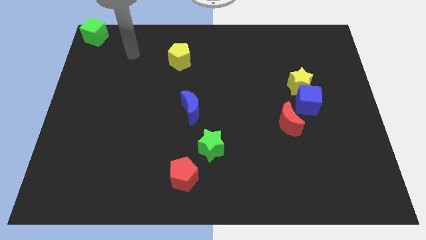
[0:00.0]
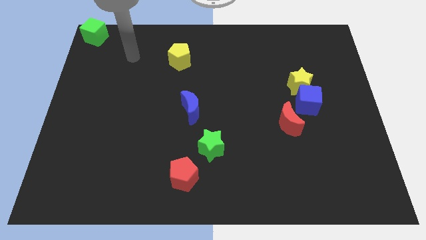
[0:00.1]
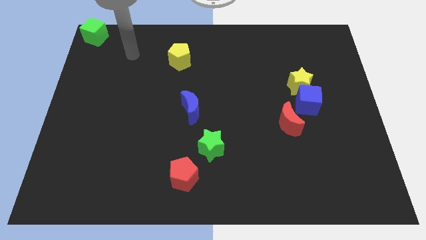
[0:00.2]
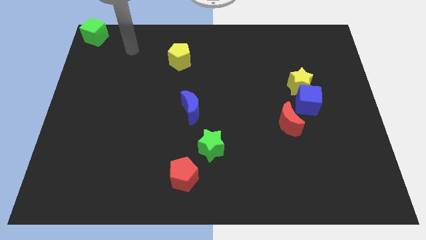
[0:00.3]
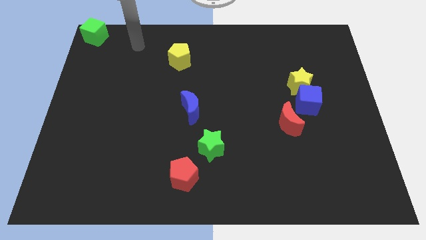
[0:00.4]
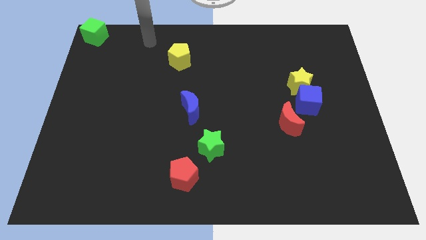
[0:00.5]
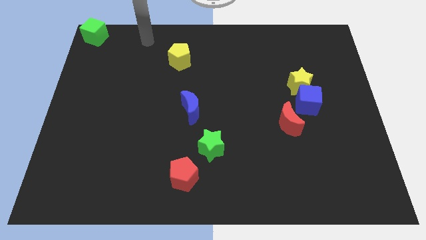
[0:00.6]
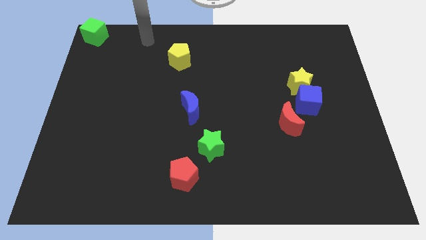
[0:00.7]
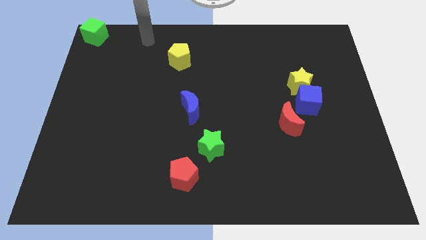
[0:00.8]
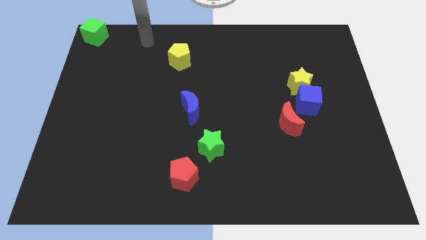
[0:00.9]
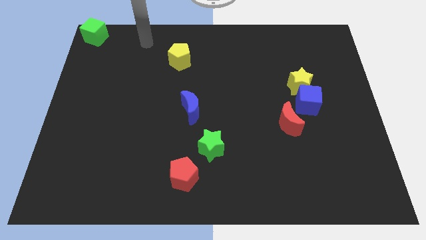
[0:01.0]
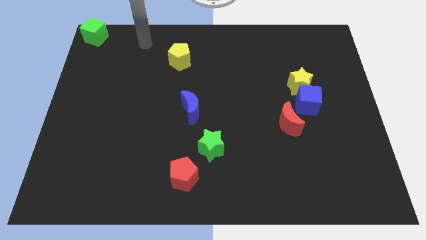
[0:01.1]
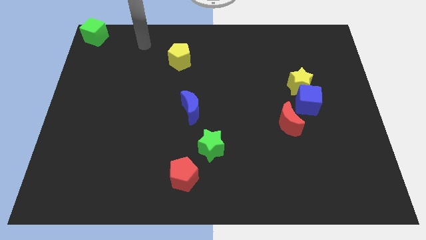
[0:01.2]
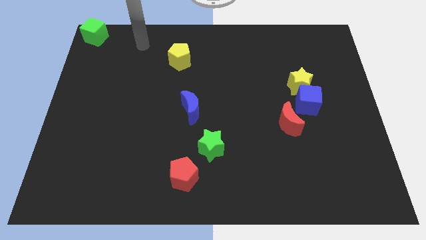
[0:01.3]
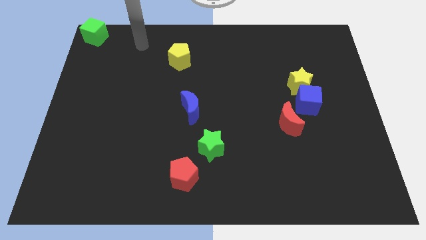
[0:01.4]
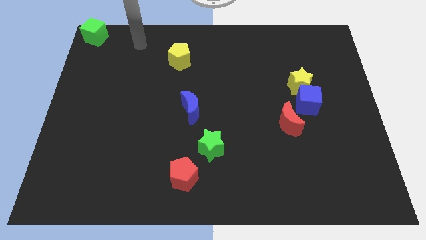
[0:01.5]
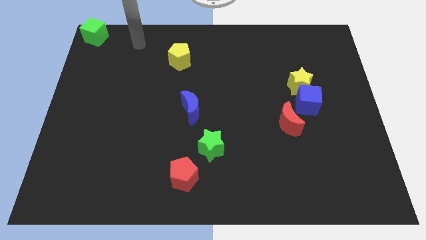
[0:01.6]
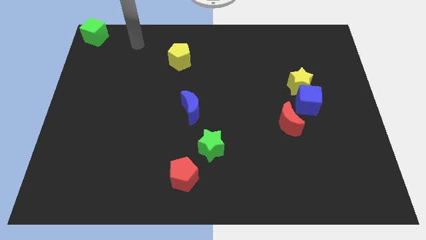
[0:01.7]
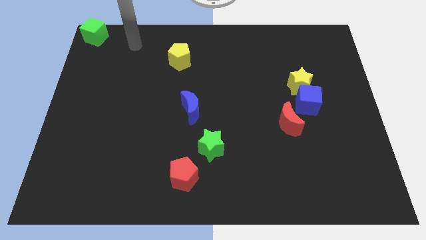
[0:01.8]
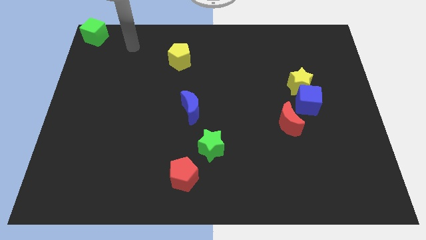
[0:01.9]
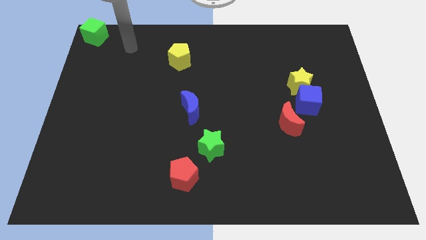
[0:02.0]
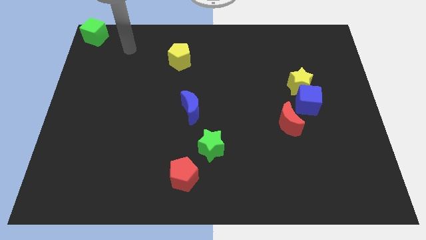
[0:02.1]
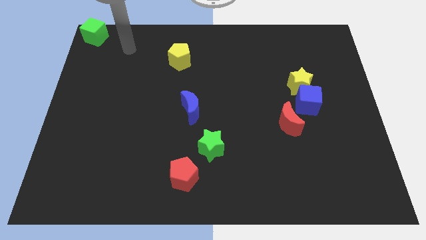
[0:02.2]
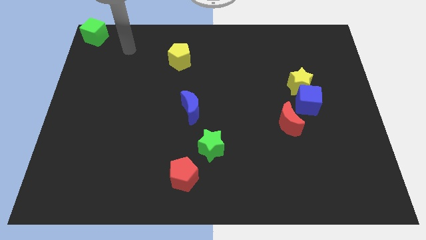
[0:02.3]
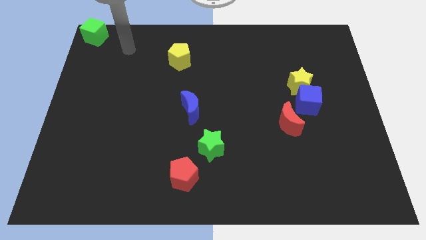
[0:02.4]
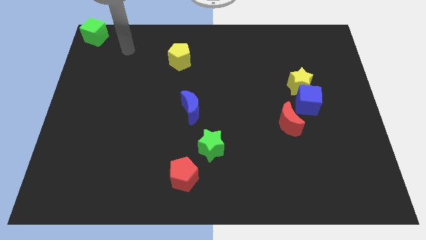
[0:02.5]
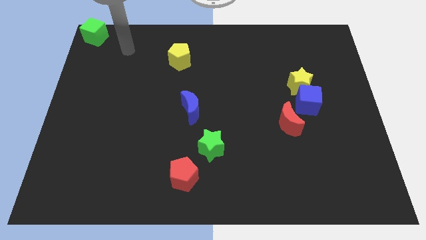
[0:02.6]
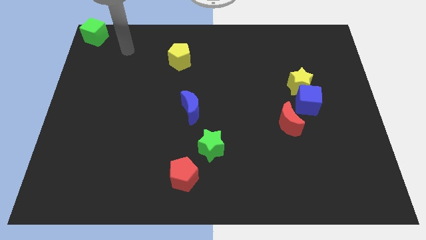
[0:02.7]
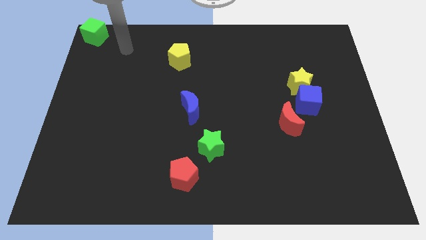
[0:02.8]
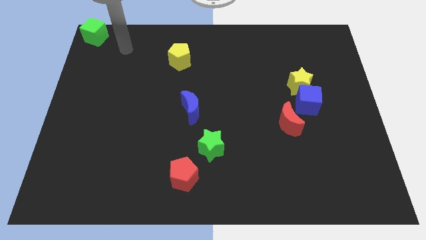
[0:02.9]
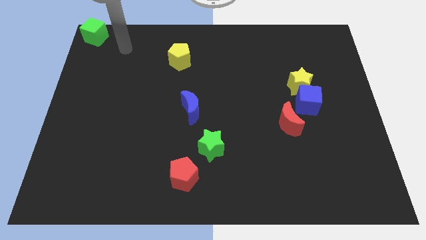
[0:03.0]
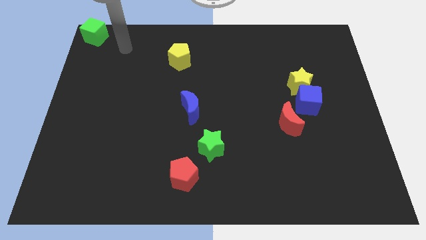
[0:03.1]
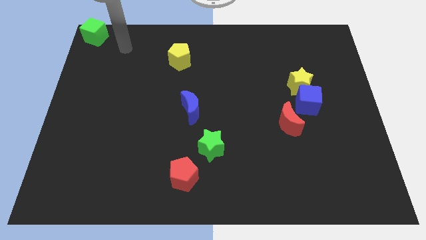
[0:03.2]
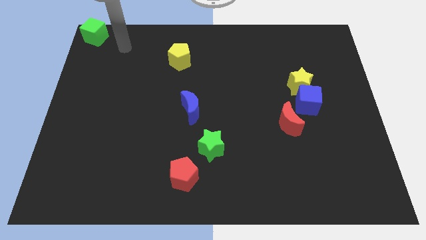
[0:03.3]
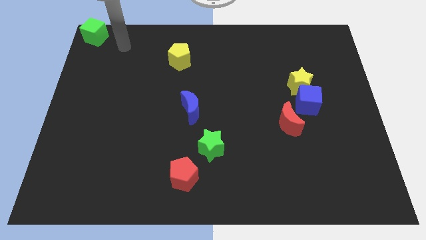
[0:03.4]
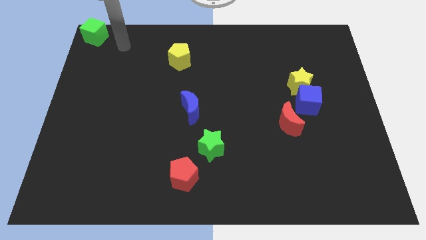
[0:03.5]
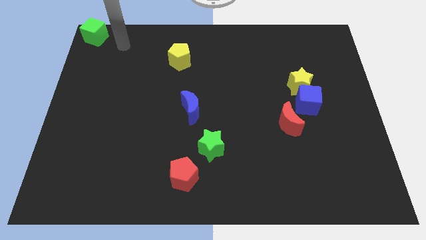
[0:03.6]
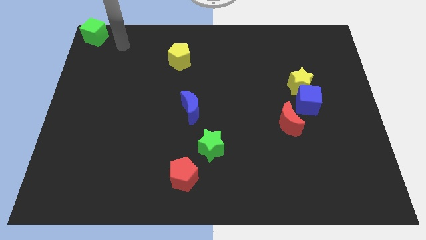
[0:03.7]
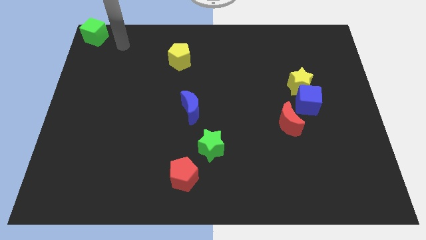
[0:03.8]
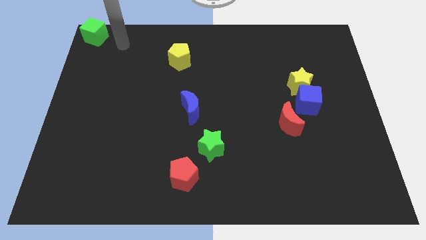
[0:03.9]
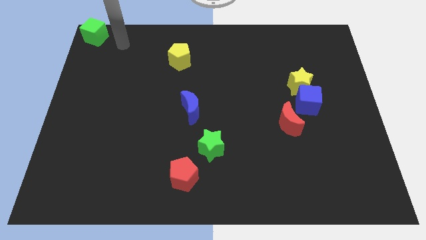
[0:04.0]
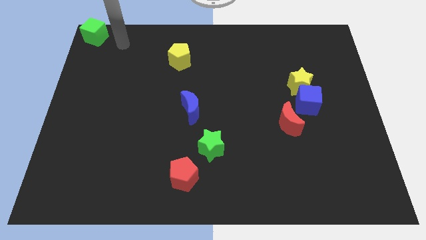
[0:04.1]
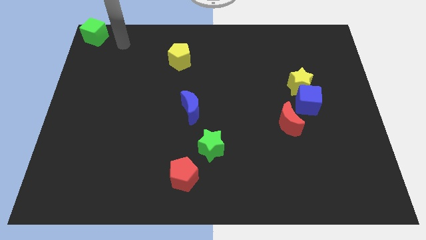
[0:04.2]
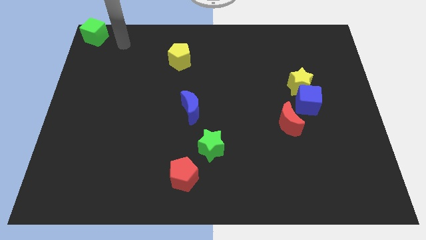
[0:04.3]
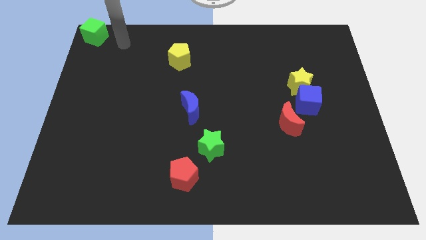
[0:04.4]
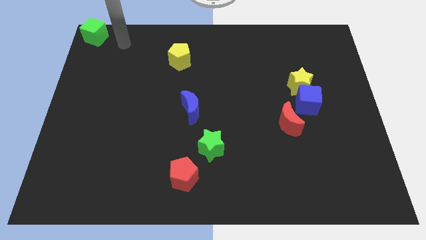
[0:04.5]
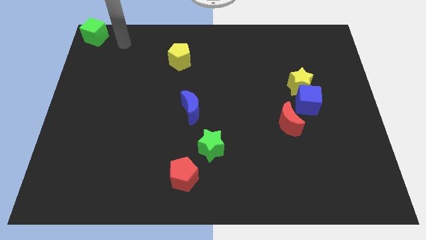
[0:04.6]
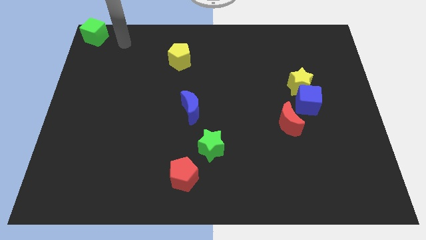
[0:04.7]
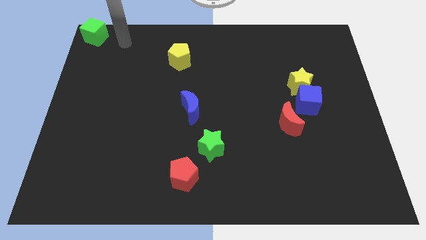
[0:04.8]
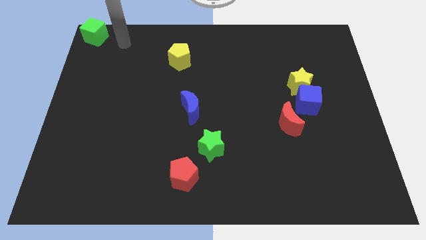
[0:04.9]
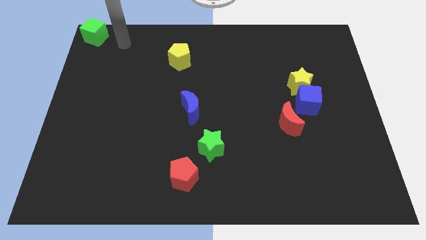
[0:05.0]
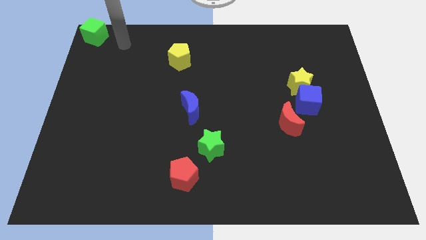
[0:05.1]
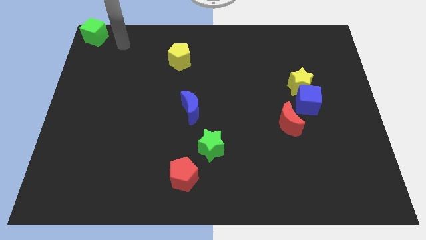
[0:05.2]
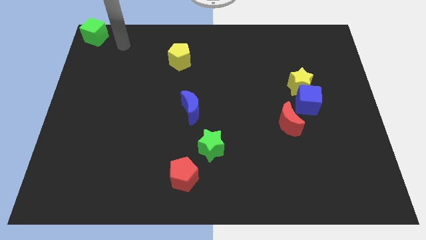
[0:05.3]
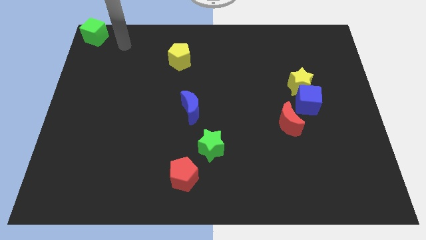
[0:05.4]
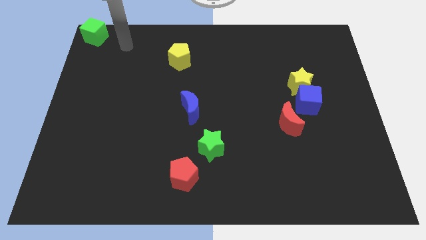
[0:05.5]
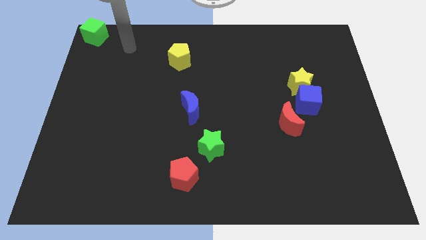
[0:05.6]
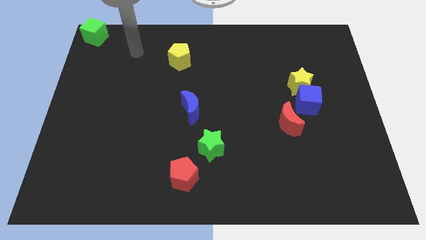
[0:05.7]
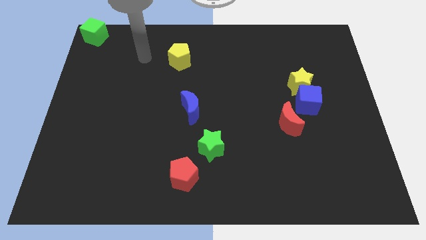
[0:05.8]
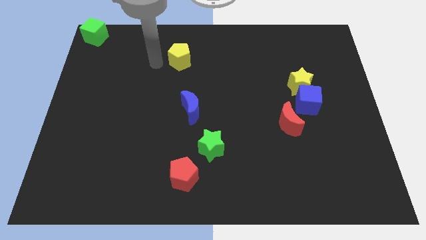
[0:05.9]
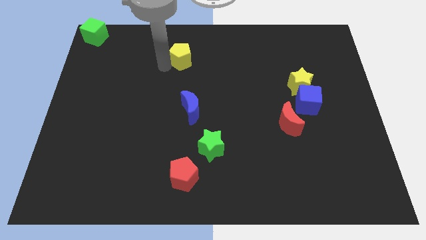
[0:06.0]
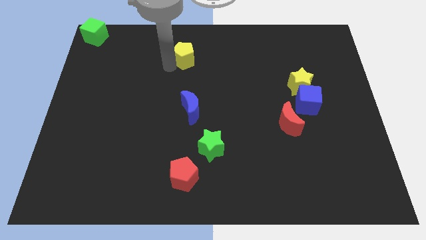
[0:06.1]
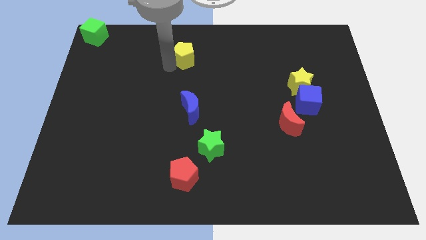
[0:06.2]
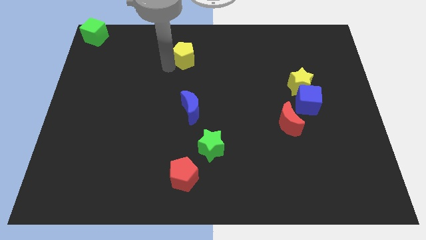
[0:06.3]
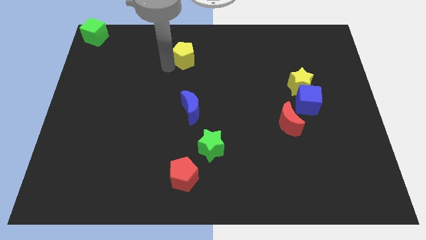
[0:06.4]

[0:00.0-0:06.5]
move arm towards the yellow pentagon

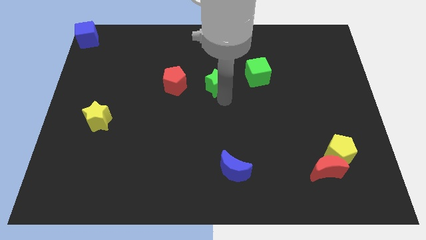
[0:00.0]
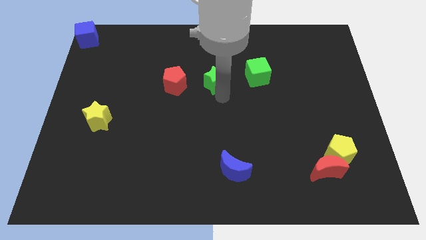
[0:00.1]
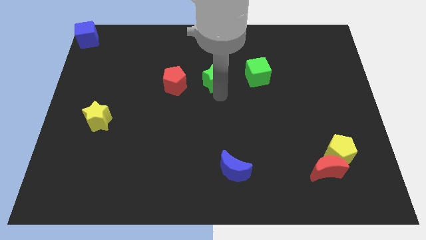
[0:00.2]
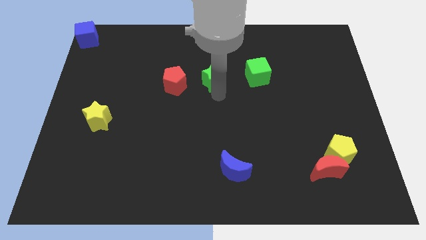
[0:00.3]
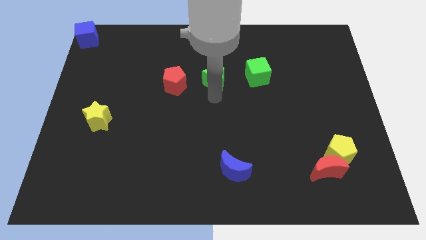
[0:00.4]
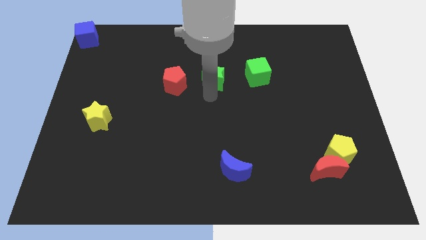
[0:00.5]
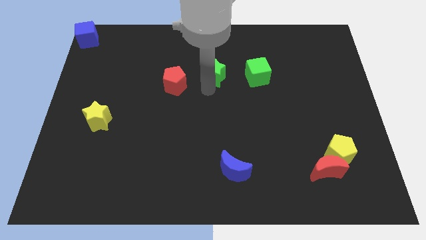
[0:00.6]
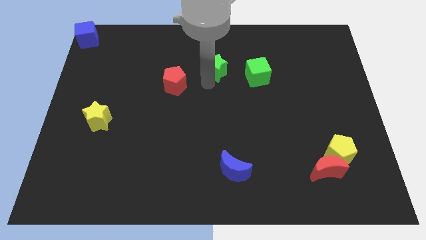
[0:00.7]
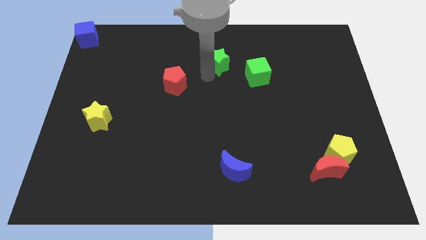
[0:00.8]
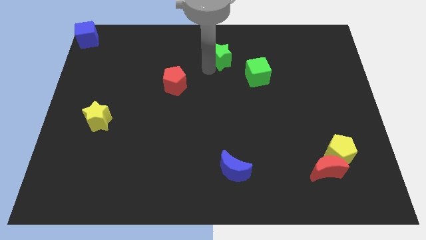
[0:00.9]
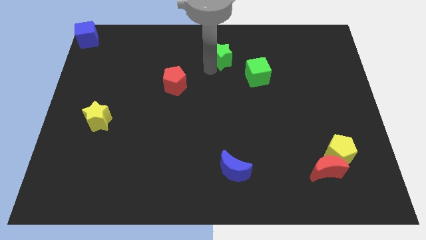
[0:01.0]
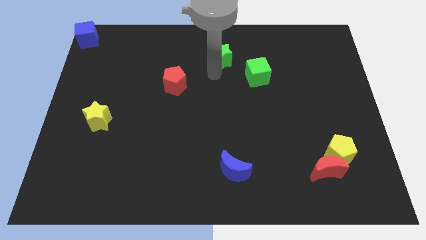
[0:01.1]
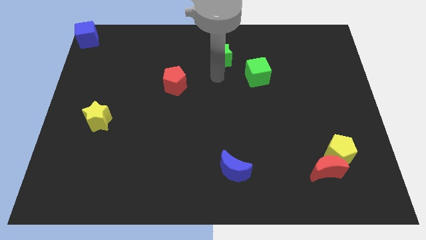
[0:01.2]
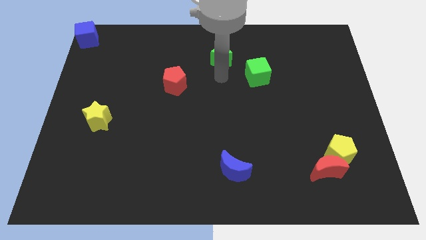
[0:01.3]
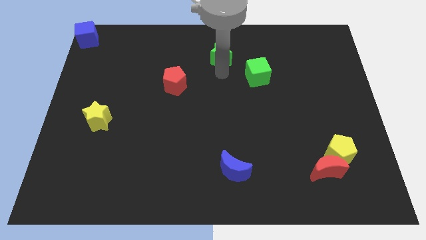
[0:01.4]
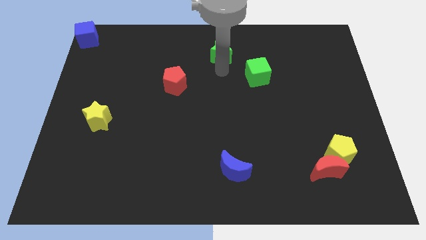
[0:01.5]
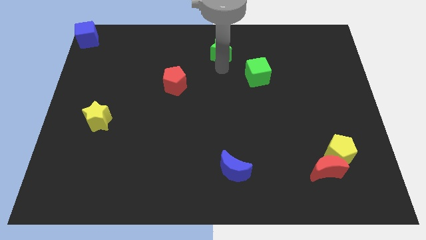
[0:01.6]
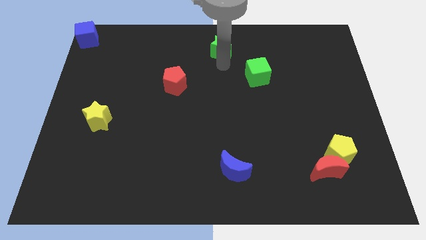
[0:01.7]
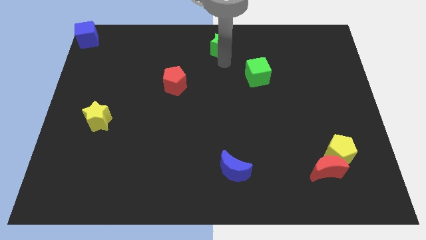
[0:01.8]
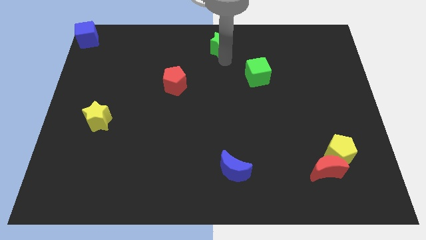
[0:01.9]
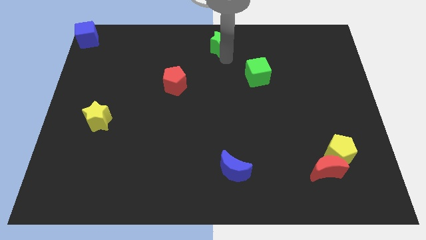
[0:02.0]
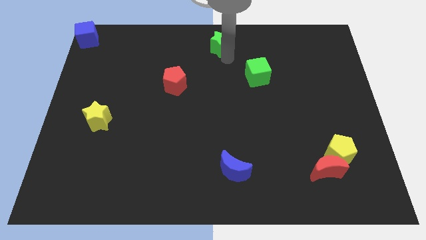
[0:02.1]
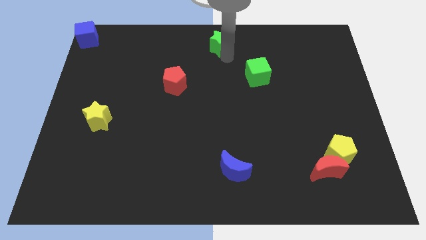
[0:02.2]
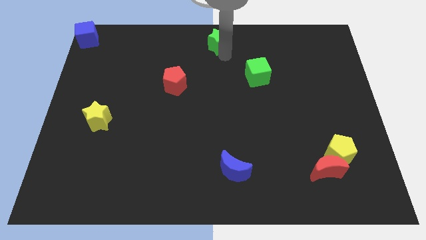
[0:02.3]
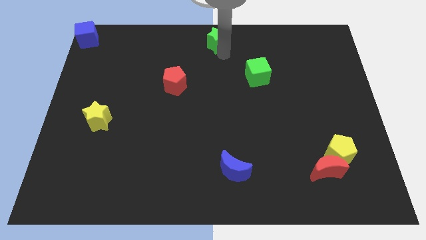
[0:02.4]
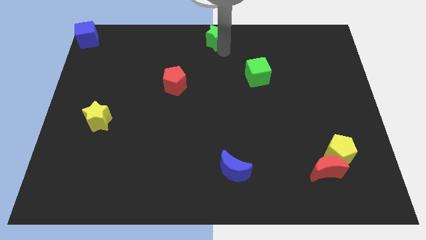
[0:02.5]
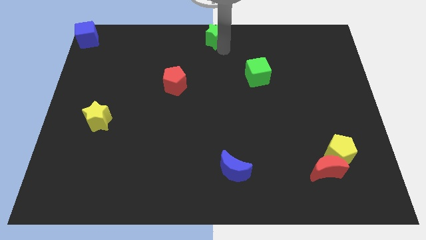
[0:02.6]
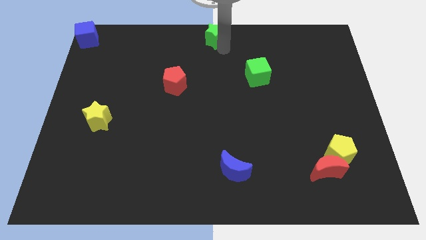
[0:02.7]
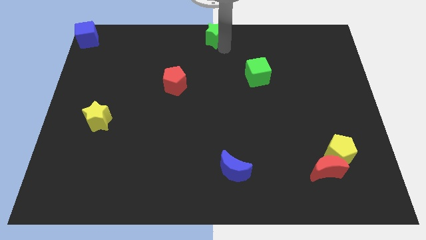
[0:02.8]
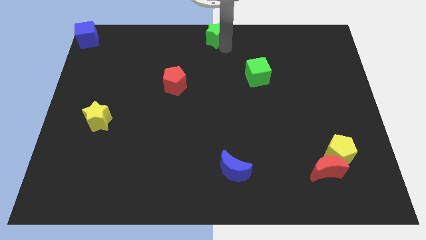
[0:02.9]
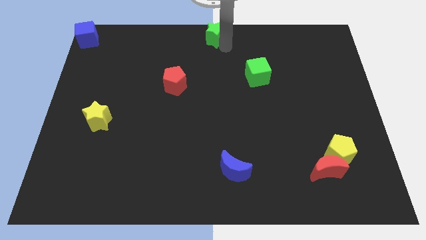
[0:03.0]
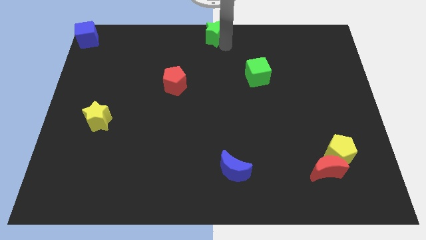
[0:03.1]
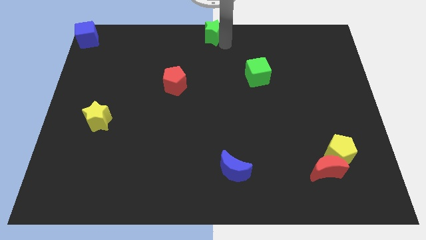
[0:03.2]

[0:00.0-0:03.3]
push green star towards top middle of the board
